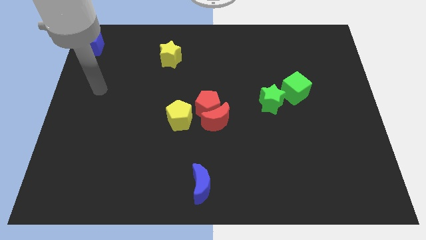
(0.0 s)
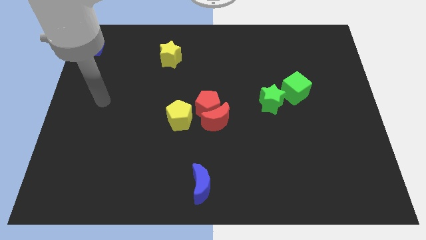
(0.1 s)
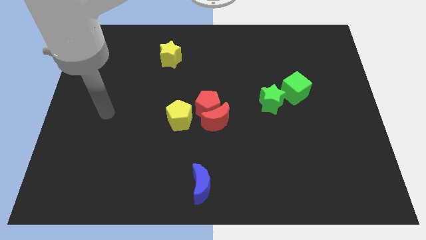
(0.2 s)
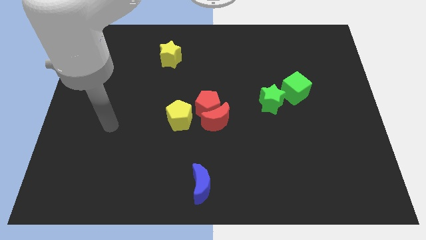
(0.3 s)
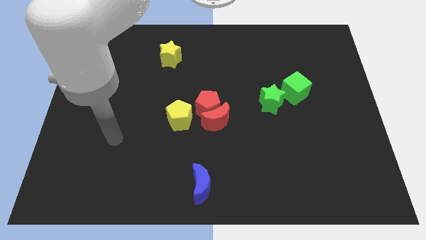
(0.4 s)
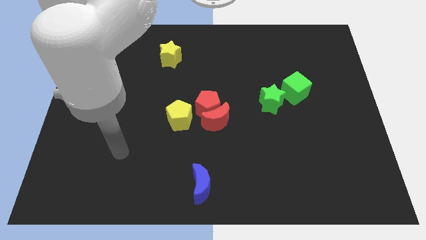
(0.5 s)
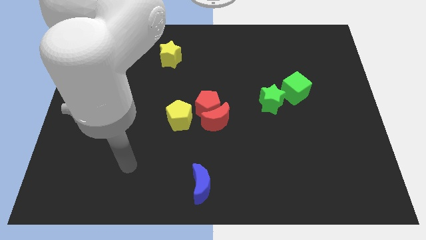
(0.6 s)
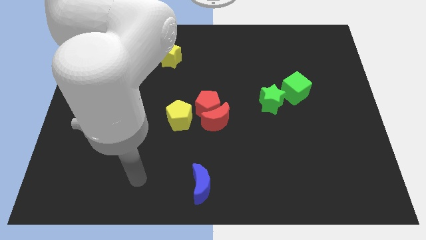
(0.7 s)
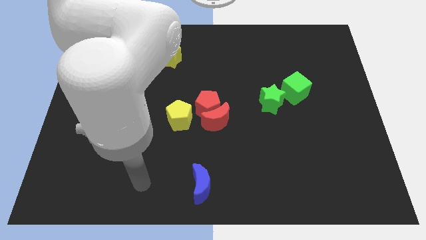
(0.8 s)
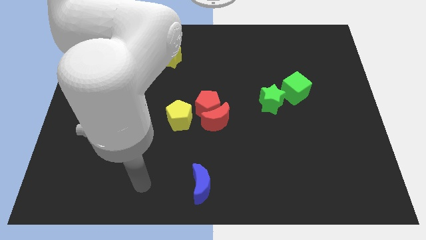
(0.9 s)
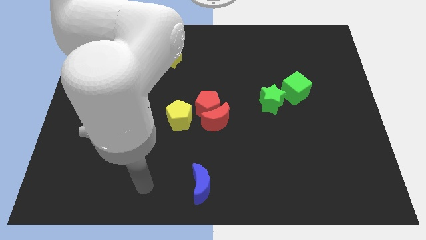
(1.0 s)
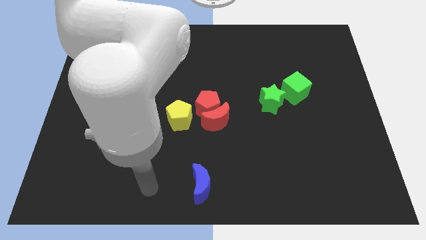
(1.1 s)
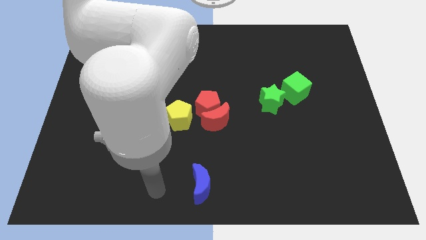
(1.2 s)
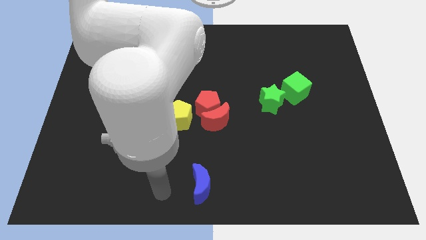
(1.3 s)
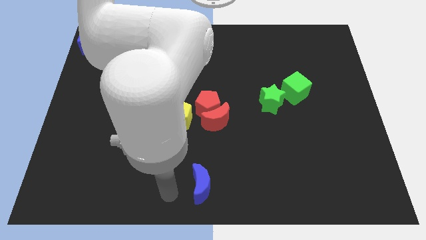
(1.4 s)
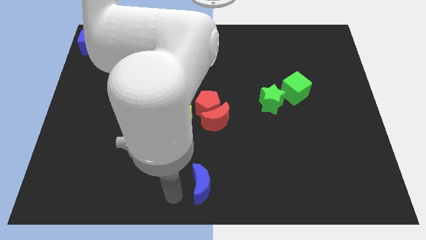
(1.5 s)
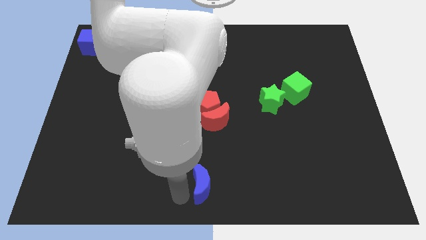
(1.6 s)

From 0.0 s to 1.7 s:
point your arm to the left of blue moon

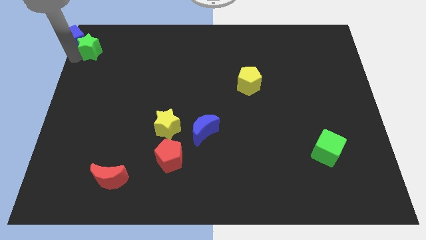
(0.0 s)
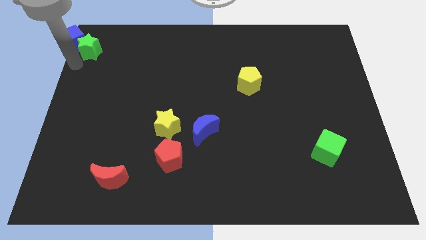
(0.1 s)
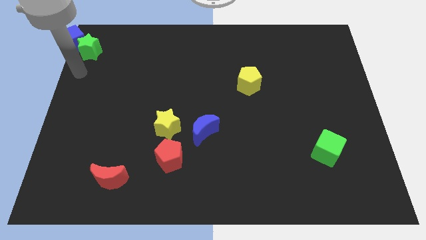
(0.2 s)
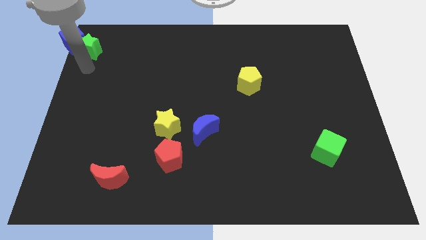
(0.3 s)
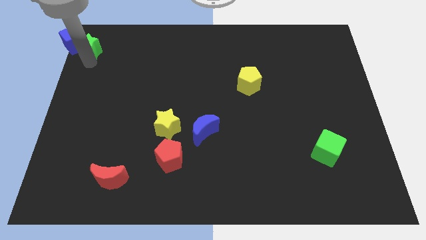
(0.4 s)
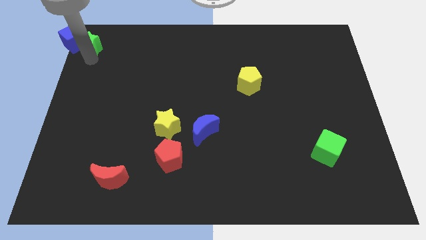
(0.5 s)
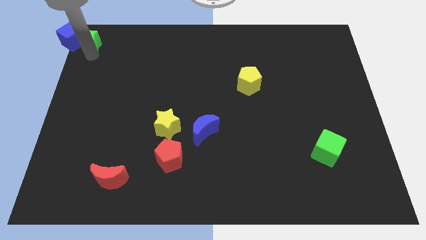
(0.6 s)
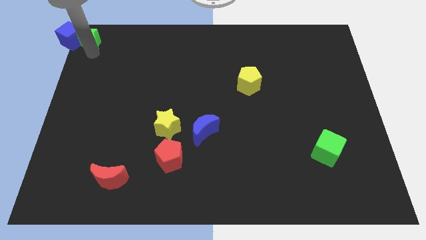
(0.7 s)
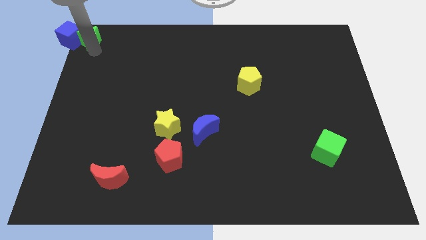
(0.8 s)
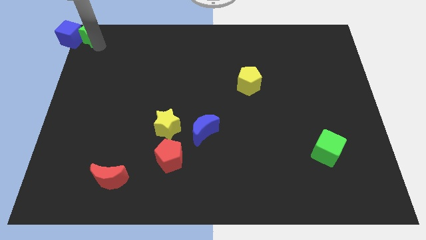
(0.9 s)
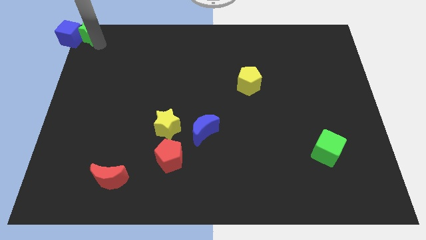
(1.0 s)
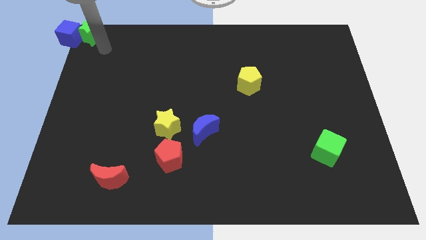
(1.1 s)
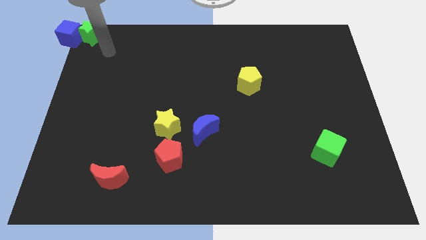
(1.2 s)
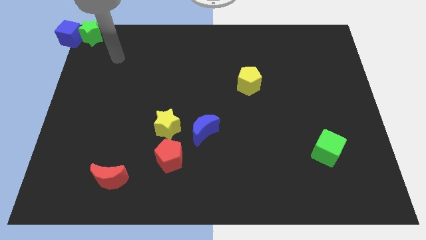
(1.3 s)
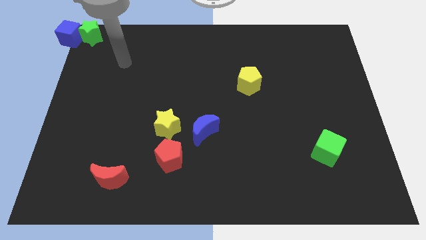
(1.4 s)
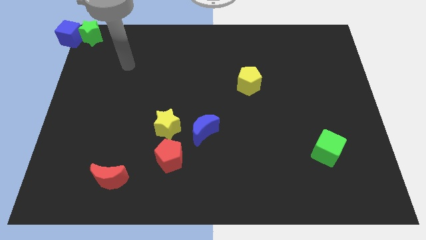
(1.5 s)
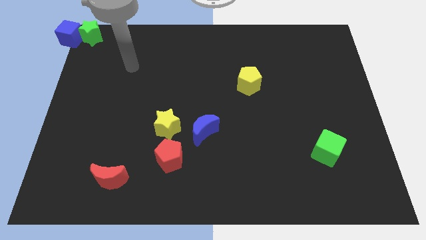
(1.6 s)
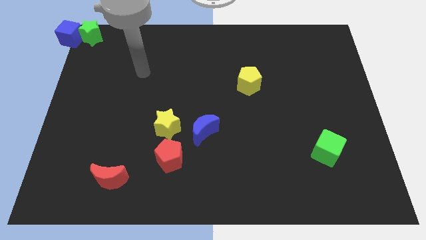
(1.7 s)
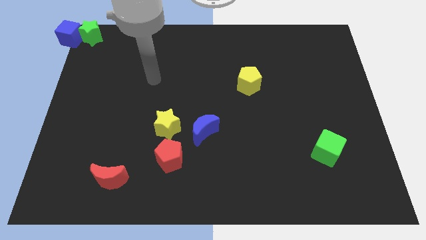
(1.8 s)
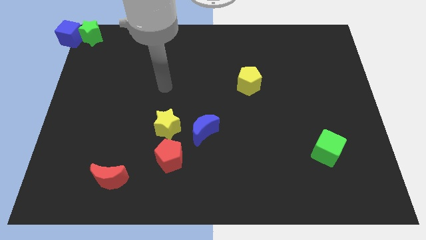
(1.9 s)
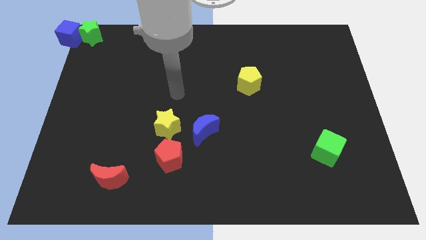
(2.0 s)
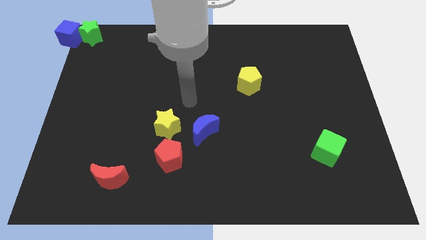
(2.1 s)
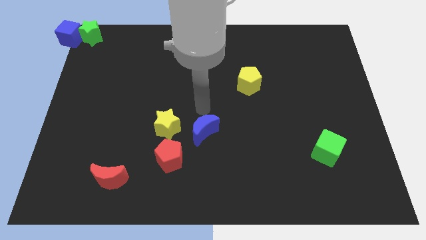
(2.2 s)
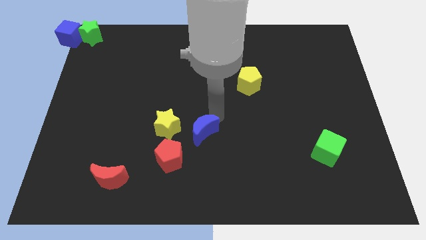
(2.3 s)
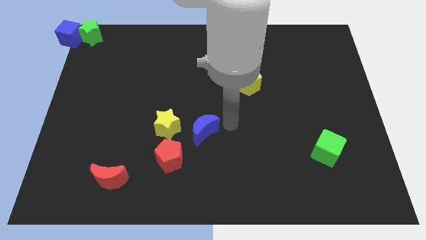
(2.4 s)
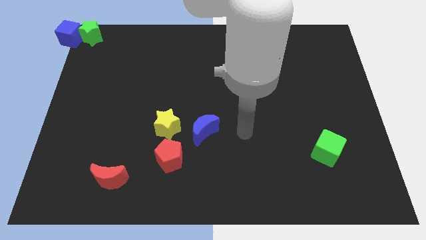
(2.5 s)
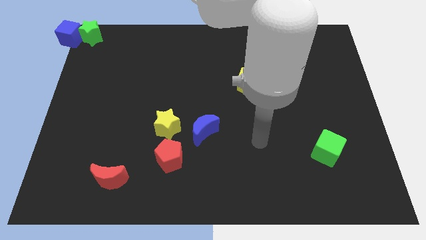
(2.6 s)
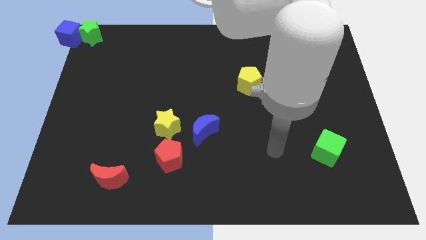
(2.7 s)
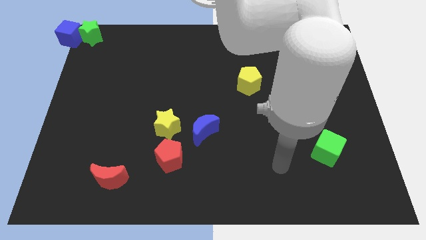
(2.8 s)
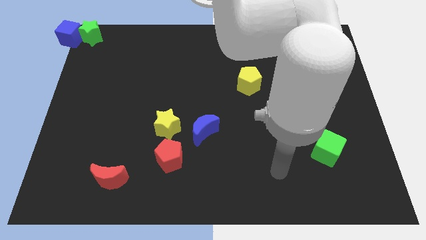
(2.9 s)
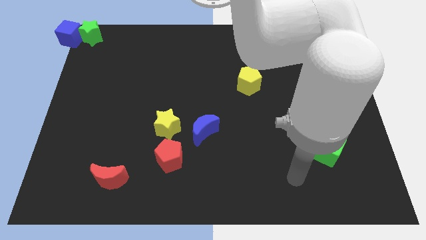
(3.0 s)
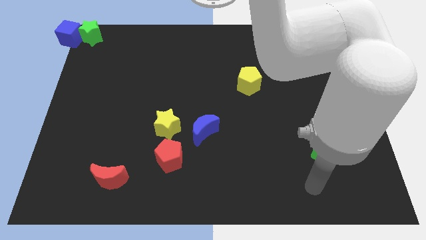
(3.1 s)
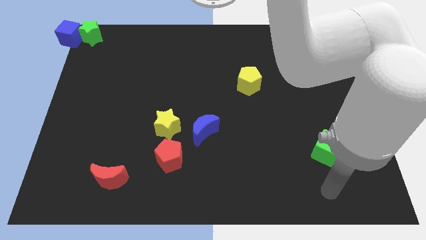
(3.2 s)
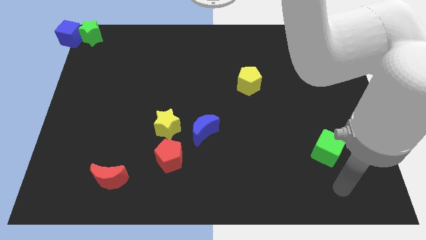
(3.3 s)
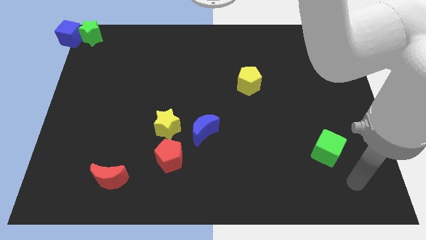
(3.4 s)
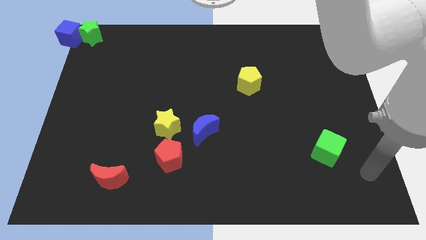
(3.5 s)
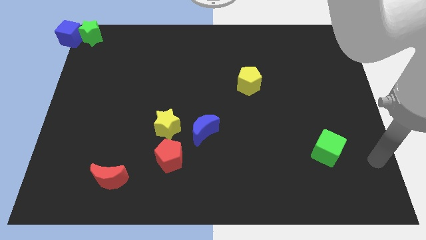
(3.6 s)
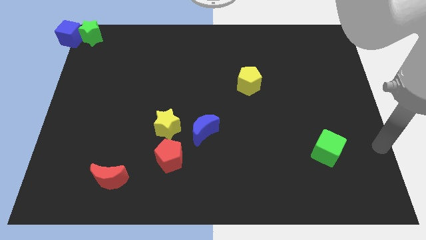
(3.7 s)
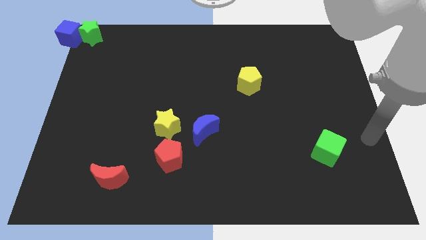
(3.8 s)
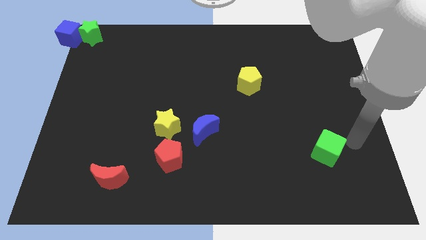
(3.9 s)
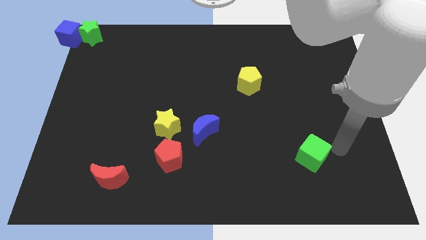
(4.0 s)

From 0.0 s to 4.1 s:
slightly push the green star and green cube

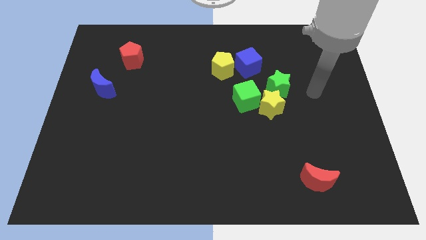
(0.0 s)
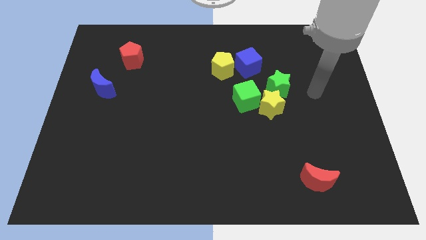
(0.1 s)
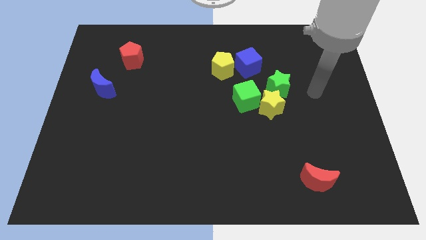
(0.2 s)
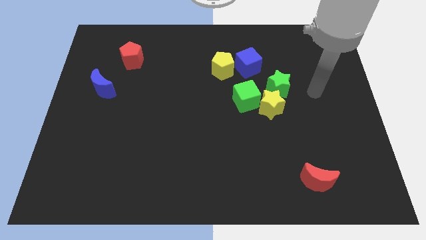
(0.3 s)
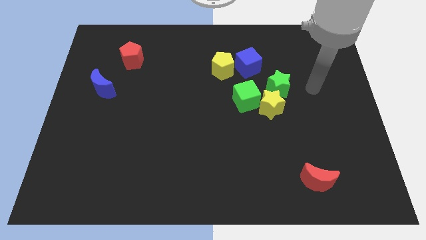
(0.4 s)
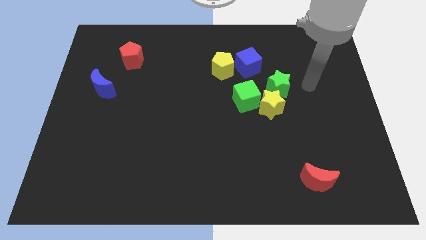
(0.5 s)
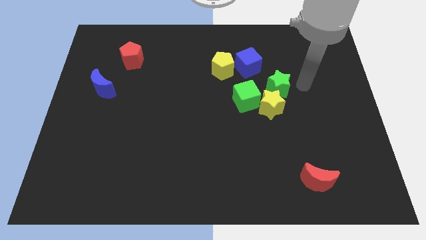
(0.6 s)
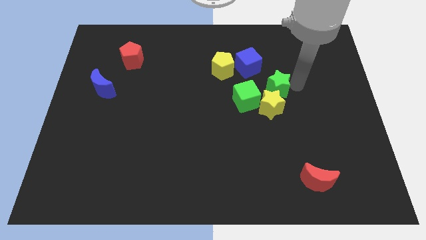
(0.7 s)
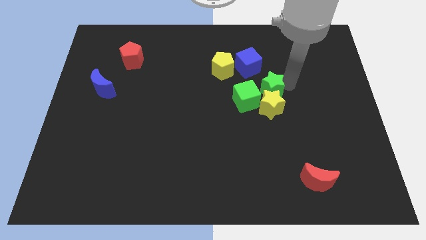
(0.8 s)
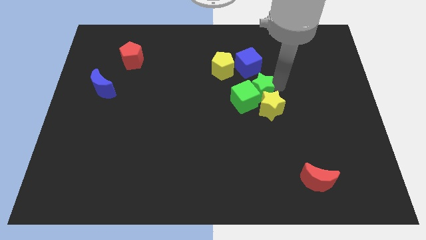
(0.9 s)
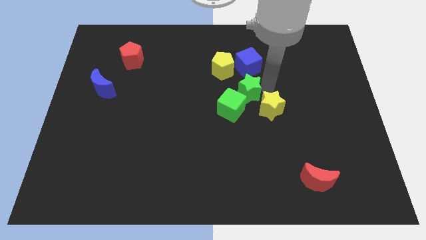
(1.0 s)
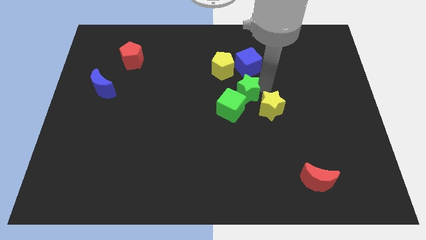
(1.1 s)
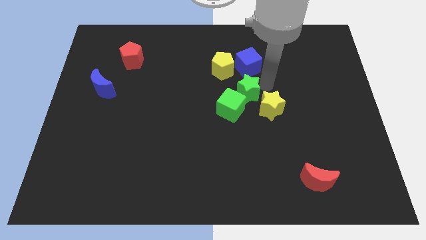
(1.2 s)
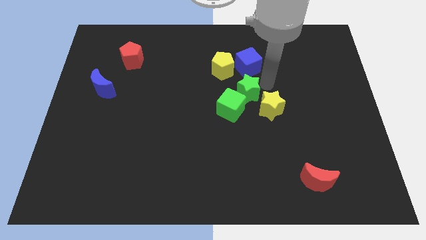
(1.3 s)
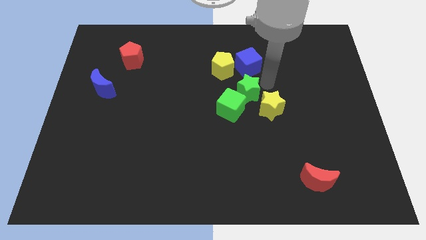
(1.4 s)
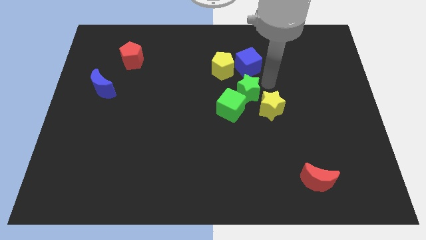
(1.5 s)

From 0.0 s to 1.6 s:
move the green blocks to the bottom side

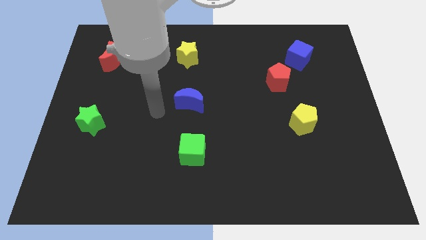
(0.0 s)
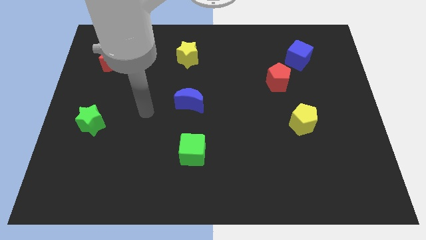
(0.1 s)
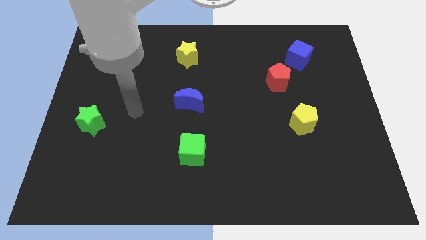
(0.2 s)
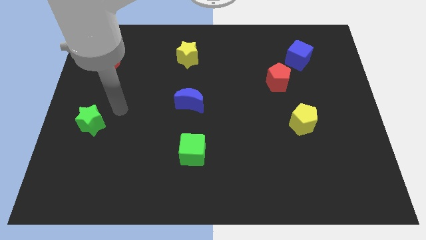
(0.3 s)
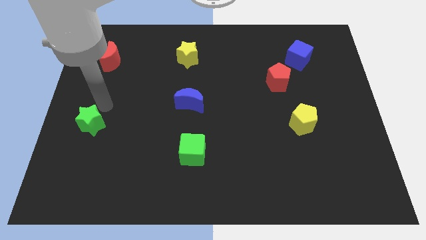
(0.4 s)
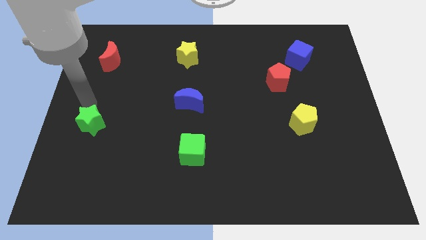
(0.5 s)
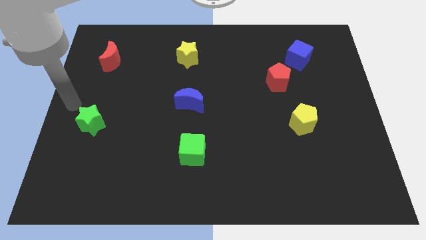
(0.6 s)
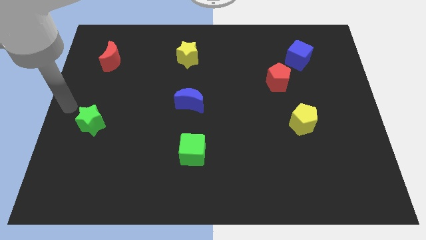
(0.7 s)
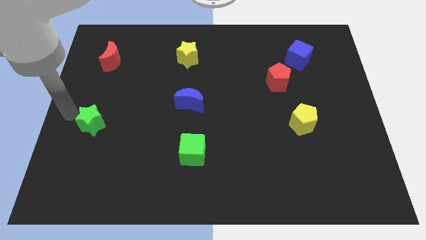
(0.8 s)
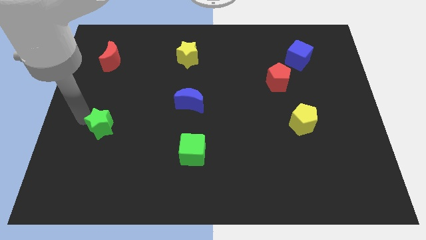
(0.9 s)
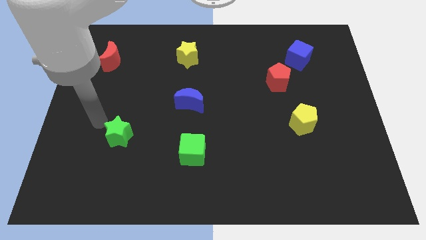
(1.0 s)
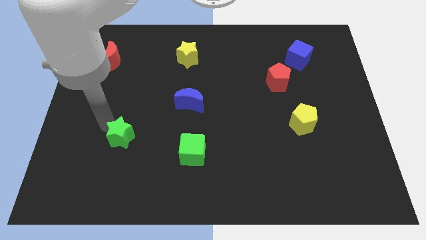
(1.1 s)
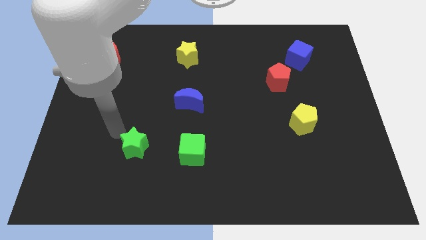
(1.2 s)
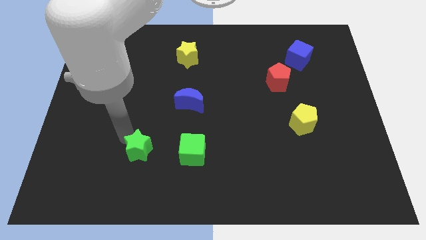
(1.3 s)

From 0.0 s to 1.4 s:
move the green star to the left side of the green cube

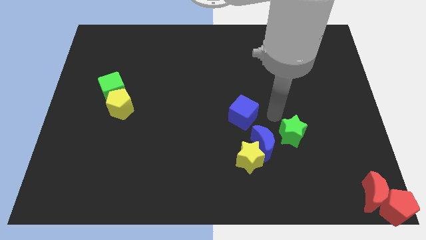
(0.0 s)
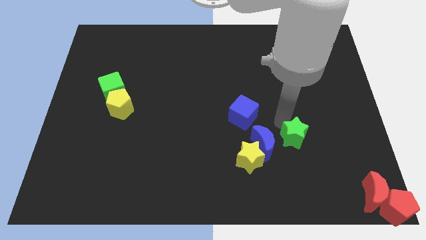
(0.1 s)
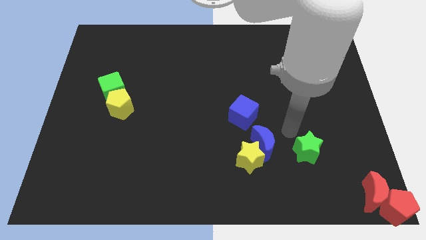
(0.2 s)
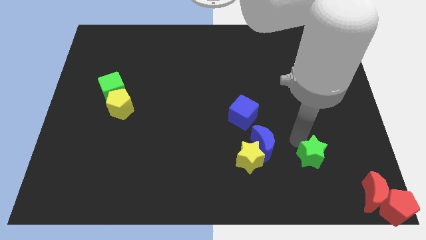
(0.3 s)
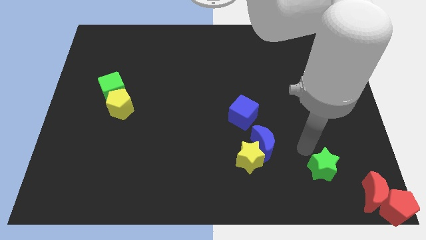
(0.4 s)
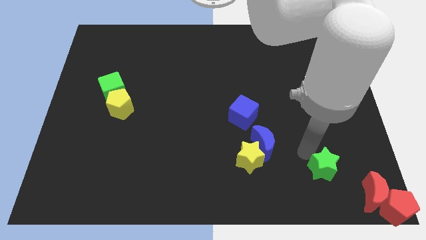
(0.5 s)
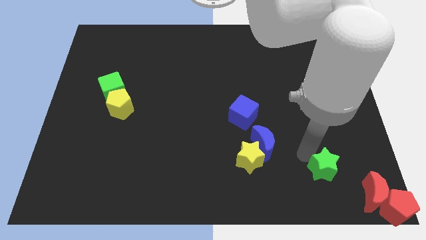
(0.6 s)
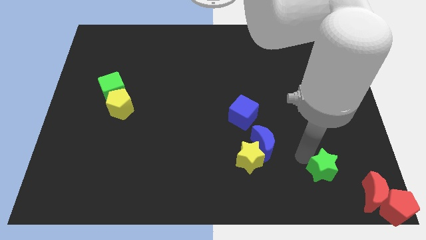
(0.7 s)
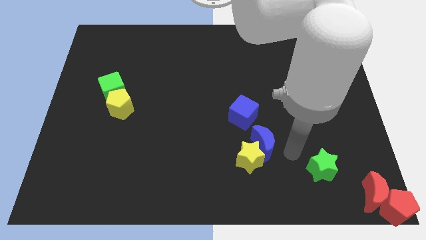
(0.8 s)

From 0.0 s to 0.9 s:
slide the green star towards the red crescent
